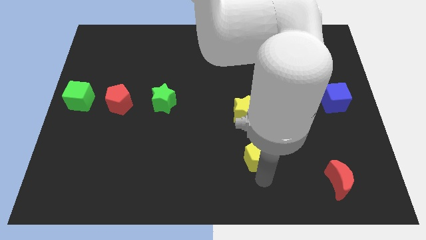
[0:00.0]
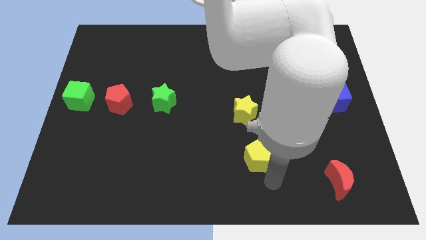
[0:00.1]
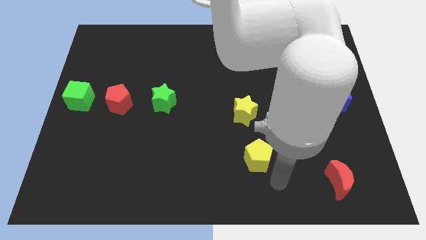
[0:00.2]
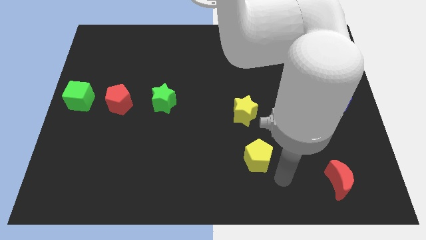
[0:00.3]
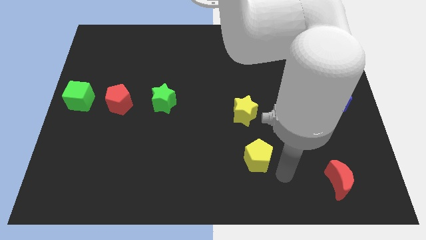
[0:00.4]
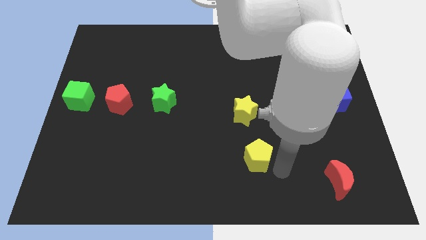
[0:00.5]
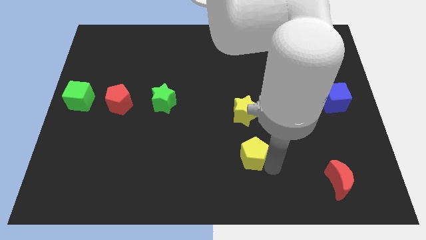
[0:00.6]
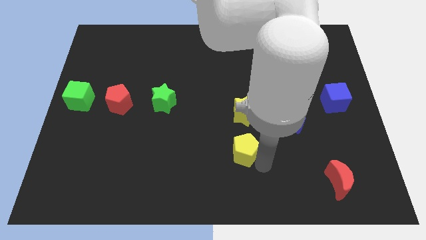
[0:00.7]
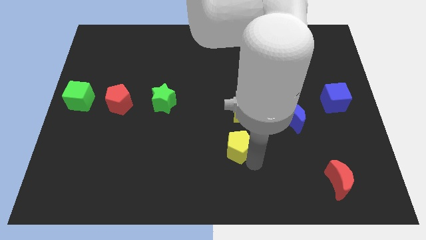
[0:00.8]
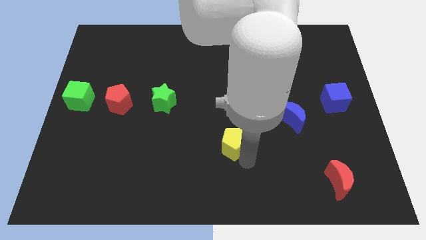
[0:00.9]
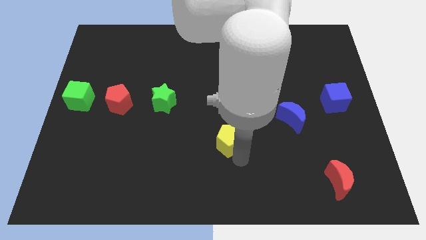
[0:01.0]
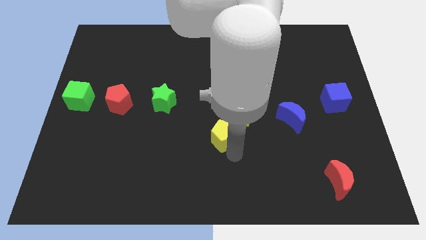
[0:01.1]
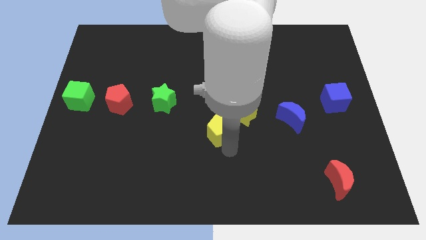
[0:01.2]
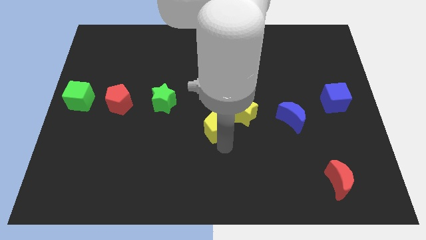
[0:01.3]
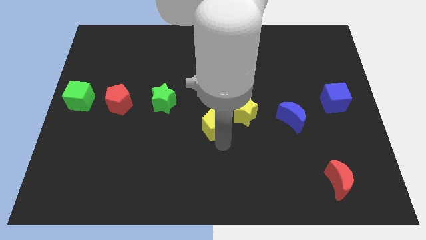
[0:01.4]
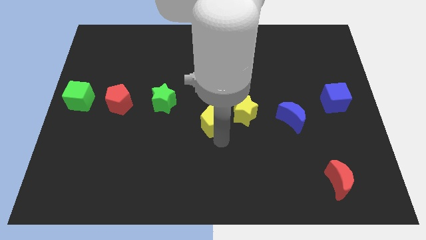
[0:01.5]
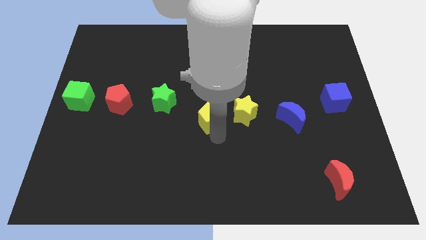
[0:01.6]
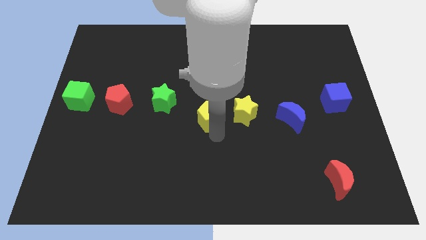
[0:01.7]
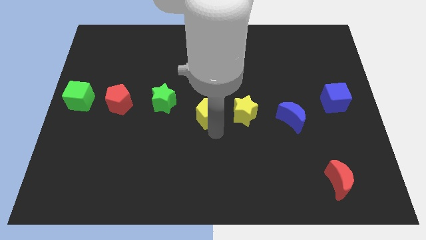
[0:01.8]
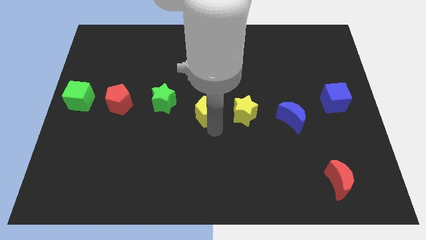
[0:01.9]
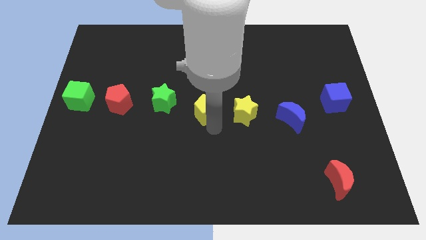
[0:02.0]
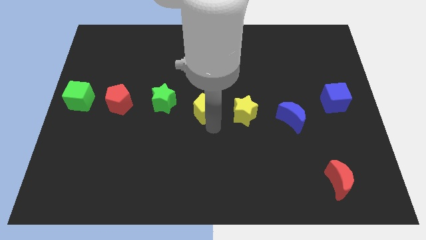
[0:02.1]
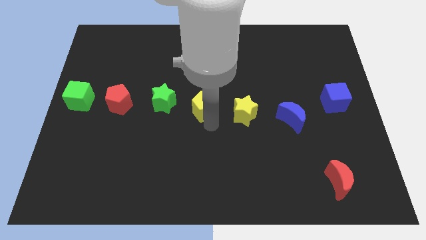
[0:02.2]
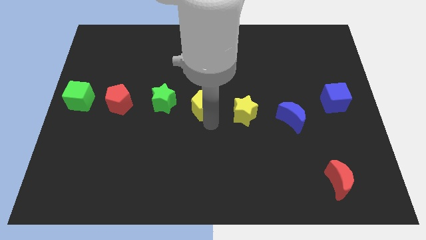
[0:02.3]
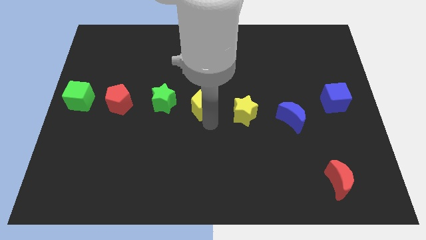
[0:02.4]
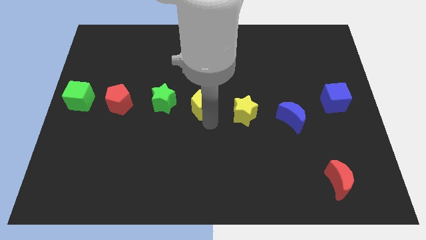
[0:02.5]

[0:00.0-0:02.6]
place yellow pentagon right to the green star

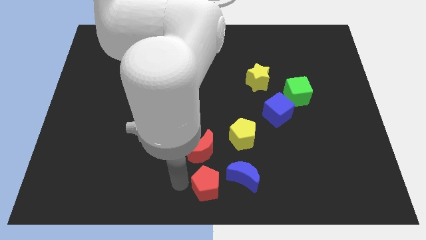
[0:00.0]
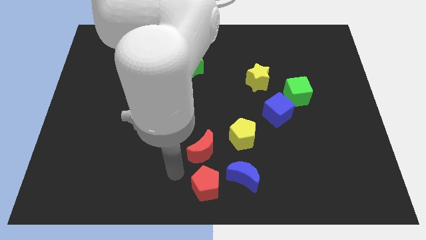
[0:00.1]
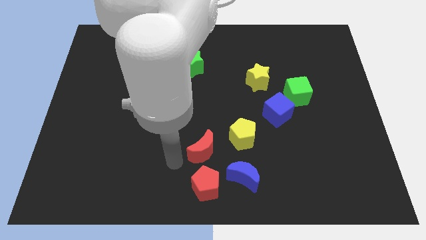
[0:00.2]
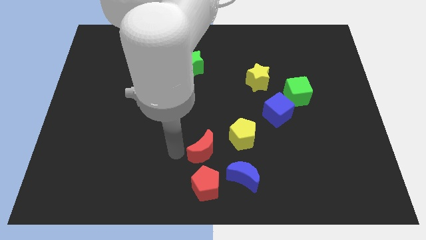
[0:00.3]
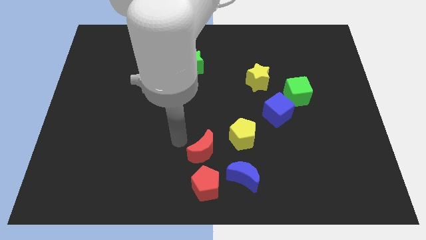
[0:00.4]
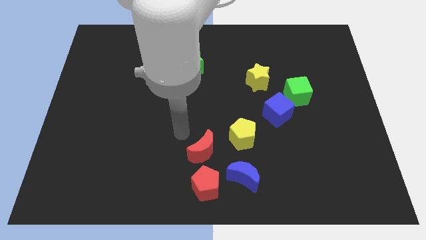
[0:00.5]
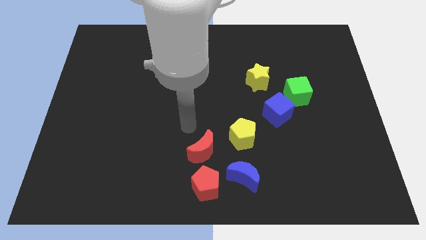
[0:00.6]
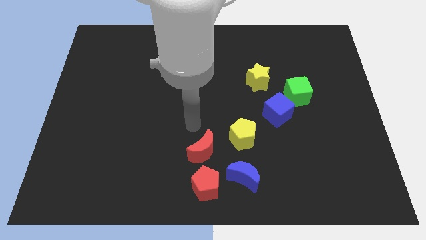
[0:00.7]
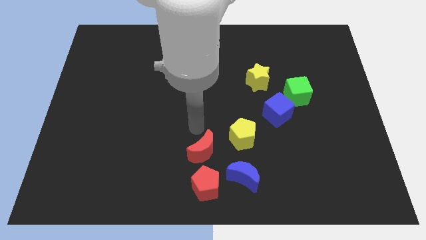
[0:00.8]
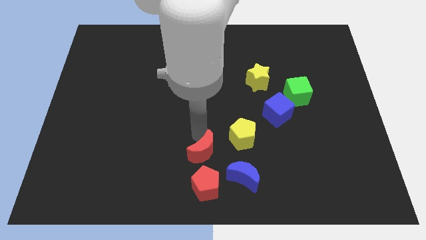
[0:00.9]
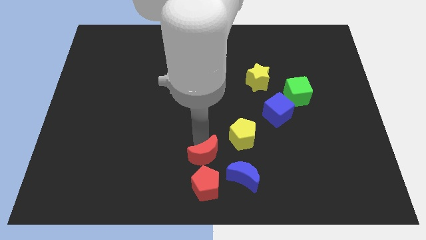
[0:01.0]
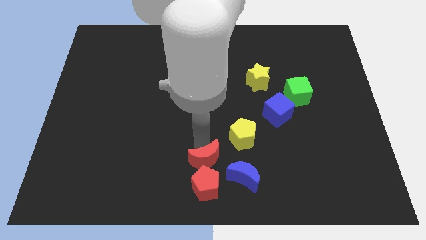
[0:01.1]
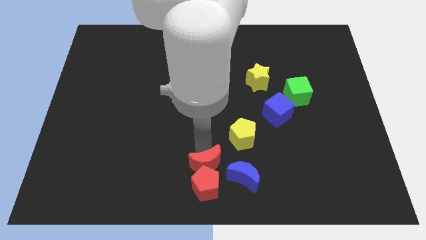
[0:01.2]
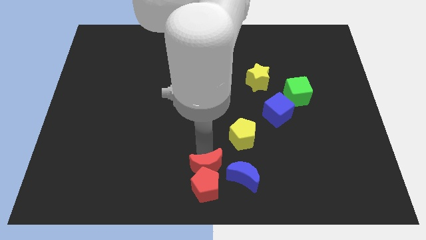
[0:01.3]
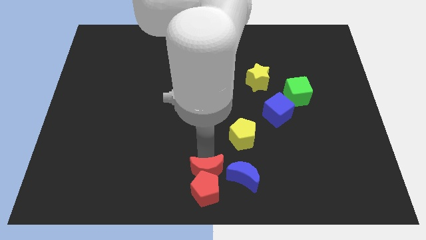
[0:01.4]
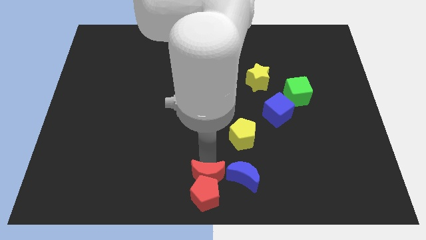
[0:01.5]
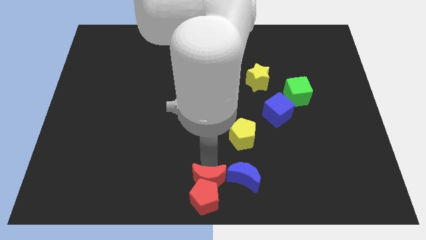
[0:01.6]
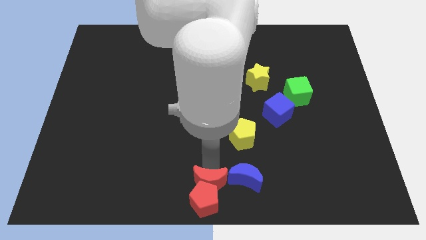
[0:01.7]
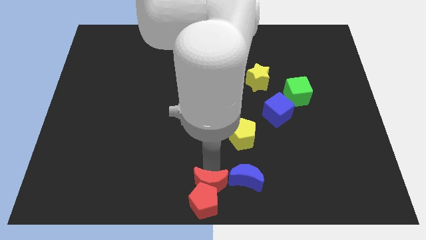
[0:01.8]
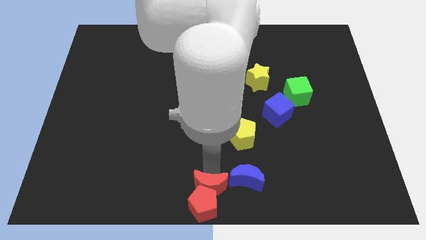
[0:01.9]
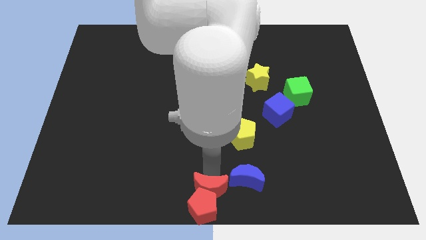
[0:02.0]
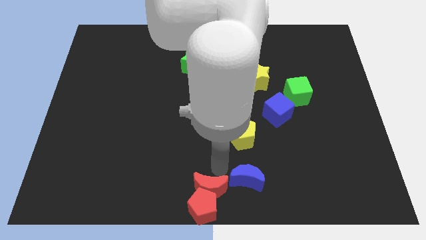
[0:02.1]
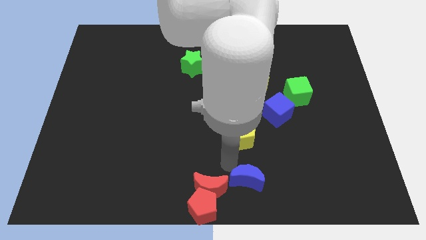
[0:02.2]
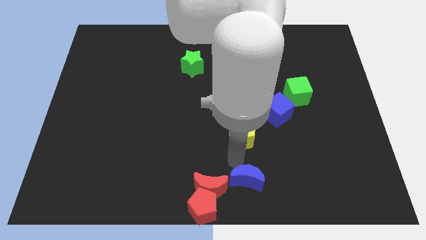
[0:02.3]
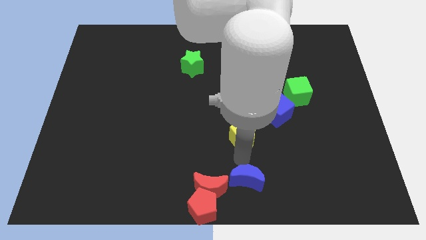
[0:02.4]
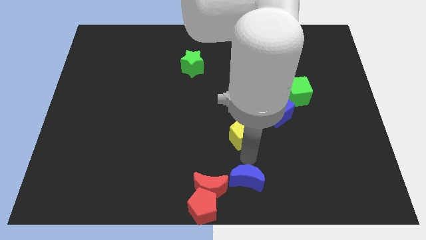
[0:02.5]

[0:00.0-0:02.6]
push the red crescent and red pentagon to the bottom of the board

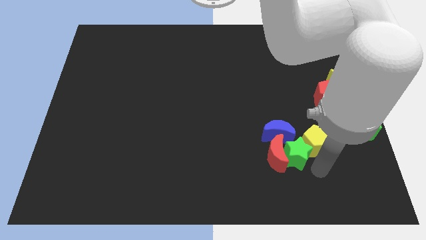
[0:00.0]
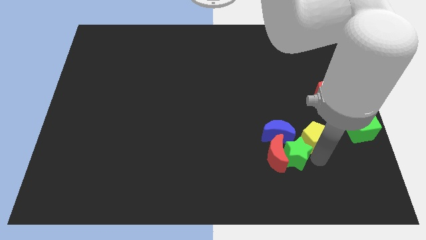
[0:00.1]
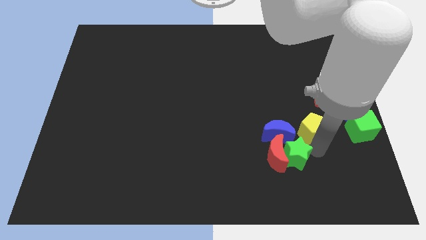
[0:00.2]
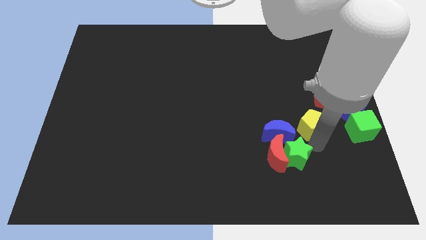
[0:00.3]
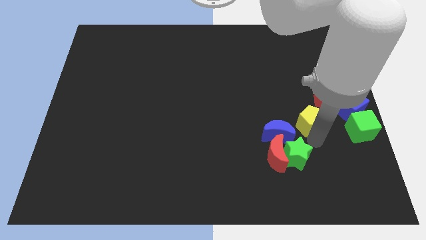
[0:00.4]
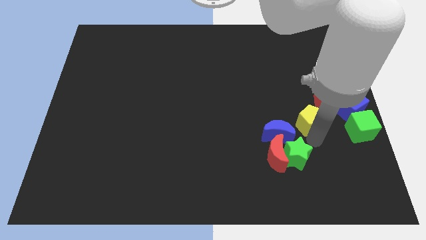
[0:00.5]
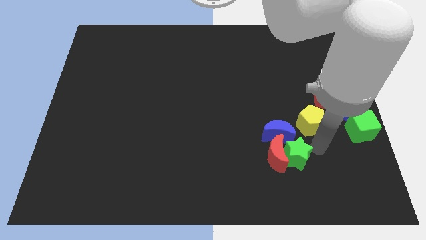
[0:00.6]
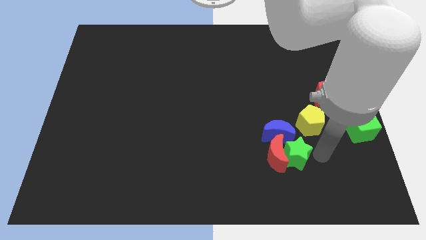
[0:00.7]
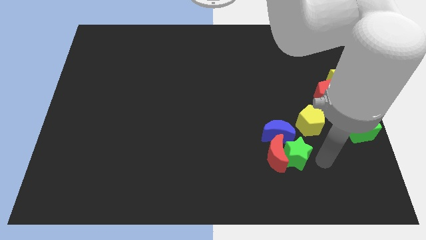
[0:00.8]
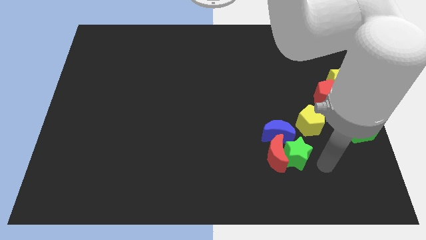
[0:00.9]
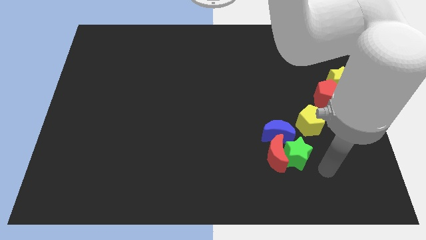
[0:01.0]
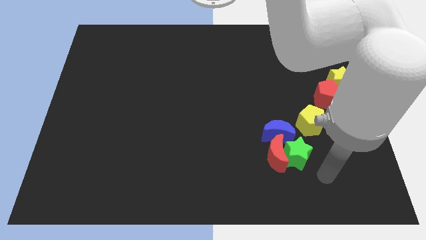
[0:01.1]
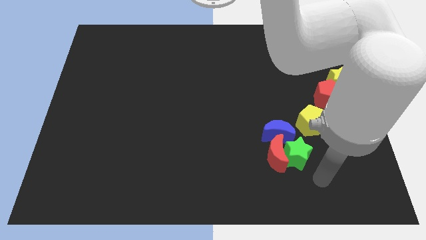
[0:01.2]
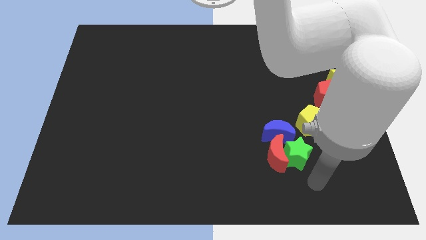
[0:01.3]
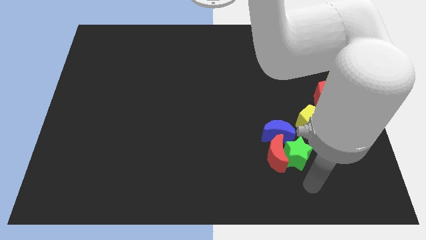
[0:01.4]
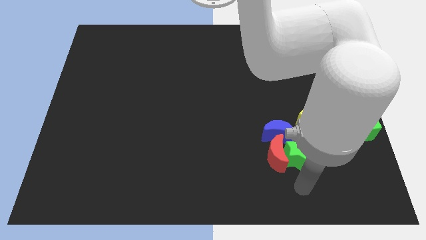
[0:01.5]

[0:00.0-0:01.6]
move the yellow pentagon diagonal to the left of the green cube

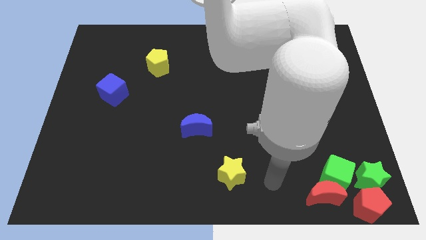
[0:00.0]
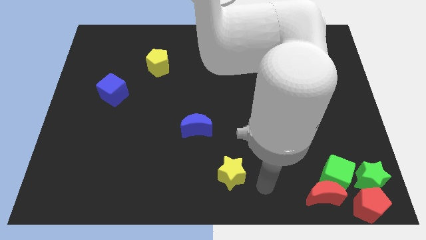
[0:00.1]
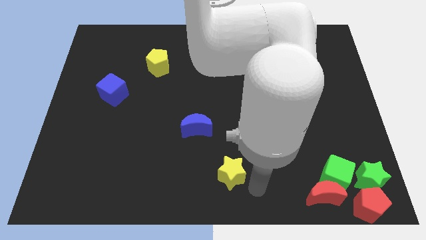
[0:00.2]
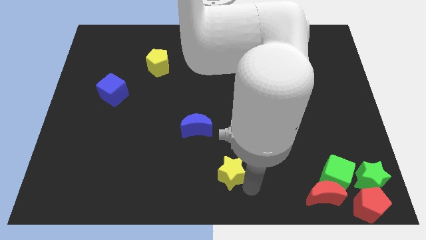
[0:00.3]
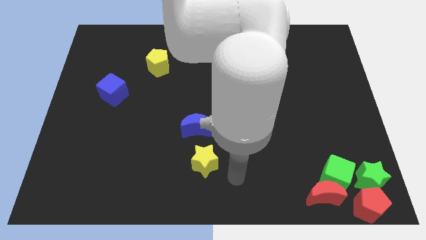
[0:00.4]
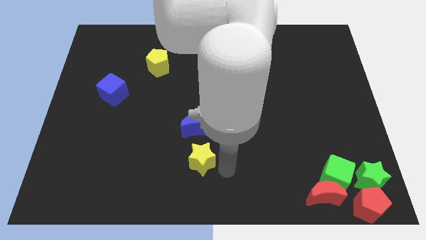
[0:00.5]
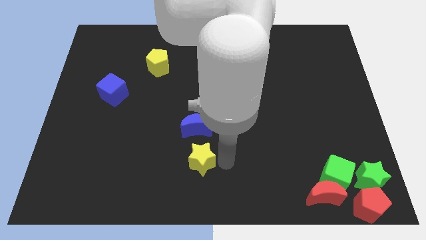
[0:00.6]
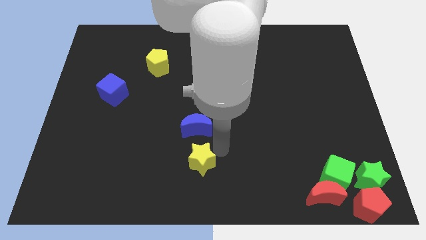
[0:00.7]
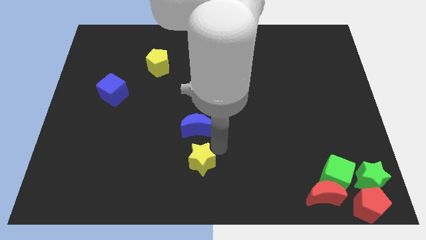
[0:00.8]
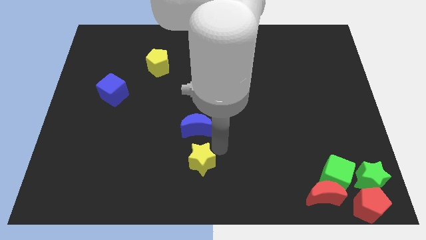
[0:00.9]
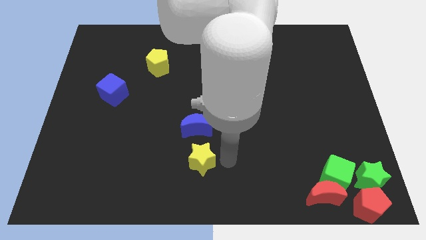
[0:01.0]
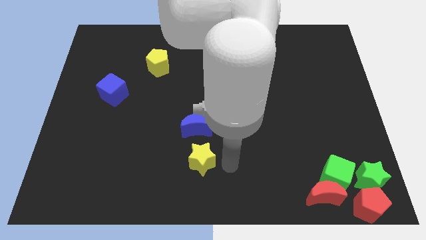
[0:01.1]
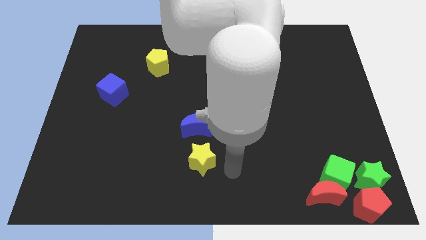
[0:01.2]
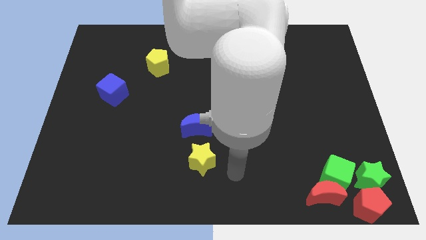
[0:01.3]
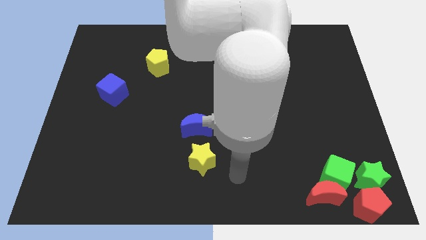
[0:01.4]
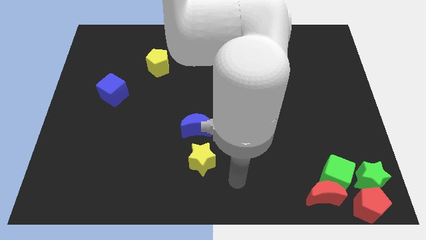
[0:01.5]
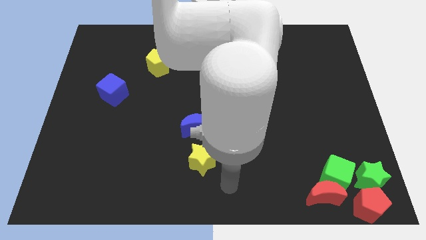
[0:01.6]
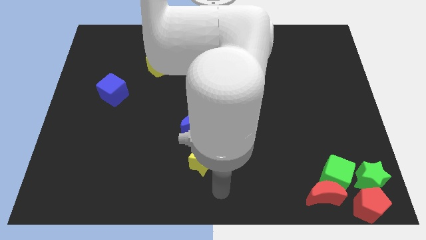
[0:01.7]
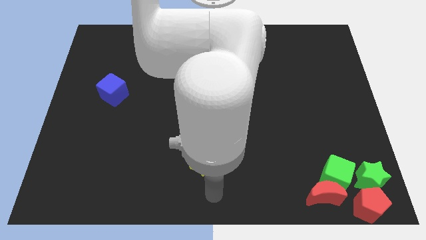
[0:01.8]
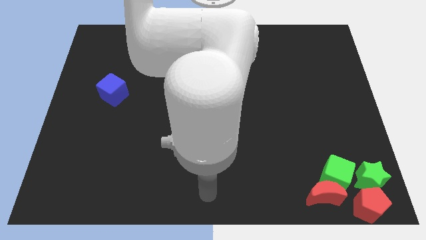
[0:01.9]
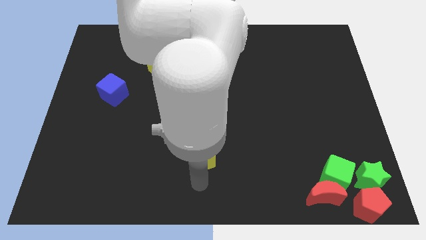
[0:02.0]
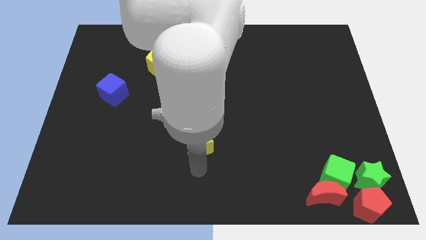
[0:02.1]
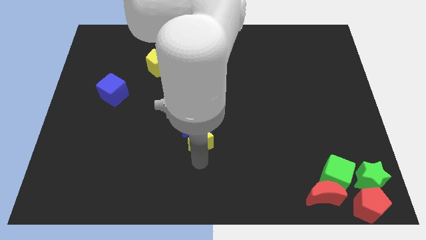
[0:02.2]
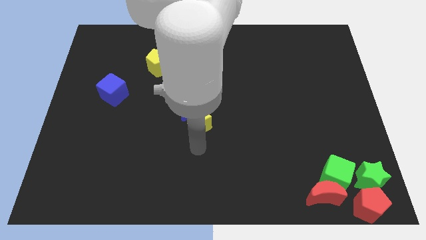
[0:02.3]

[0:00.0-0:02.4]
push yellow star into the blue crescent
